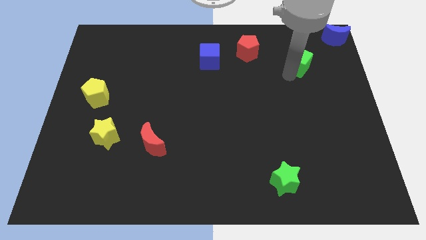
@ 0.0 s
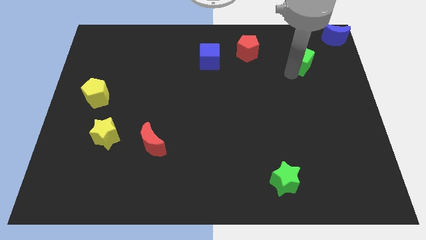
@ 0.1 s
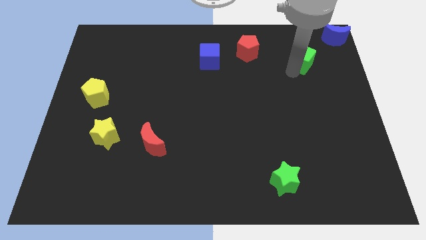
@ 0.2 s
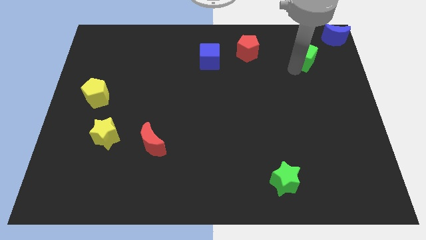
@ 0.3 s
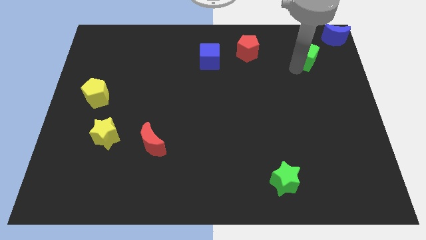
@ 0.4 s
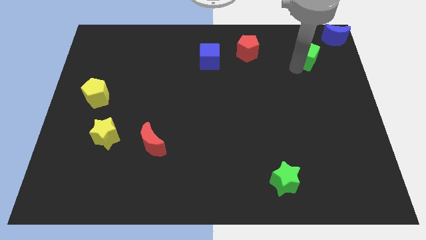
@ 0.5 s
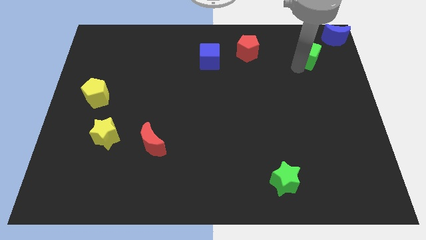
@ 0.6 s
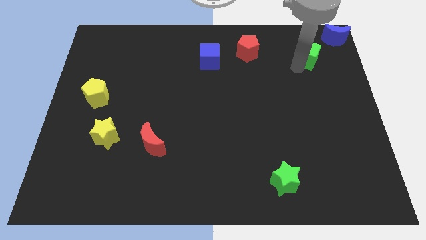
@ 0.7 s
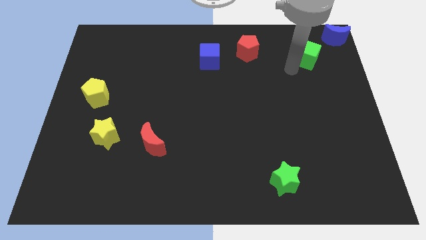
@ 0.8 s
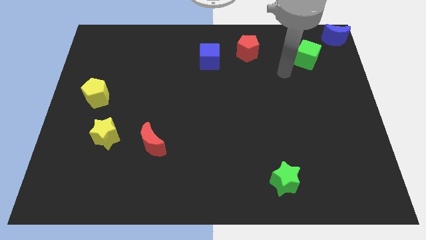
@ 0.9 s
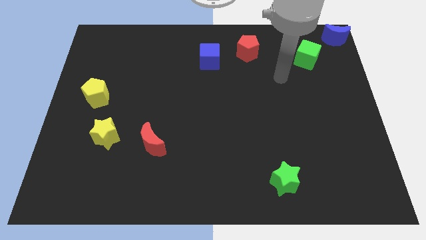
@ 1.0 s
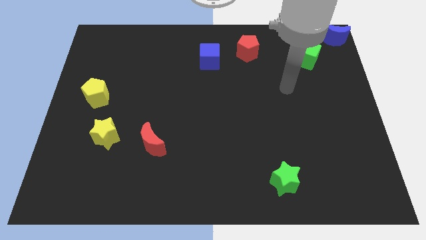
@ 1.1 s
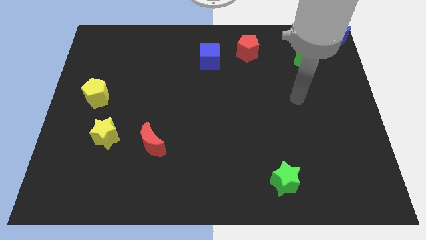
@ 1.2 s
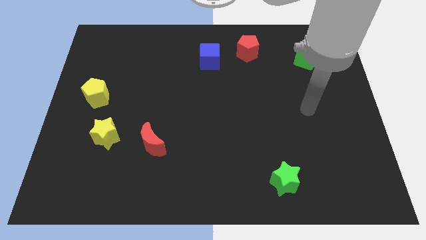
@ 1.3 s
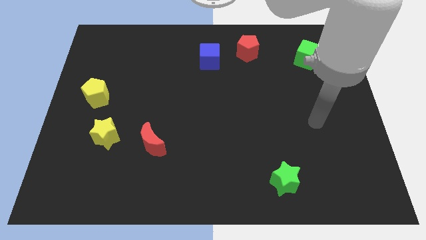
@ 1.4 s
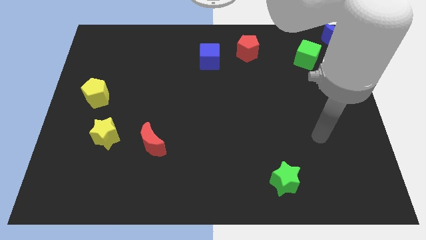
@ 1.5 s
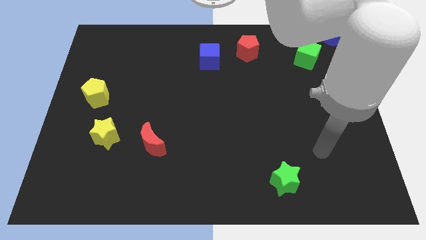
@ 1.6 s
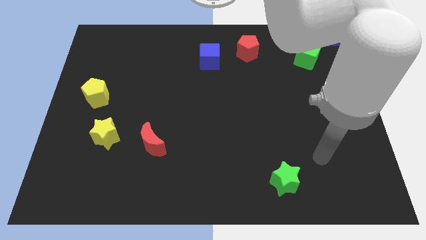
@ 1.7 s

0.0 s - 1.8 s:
push the green cube close to the blue moon

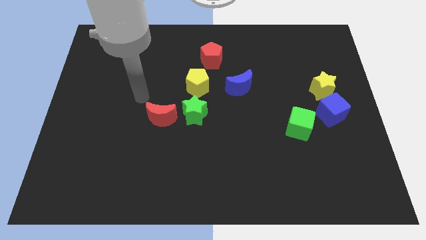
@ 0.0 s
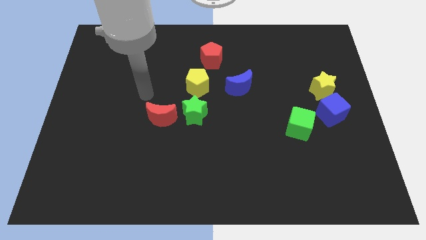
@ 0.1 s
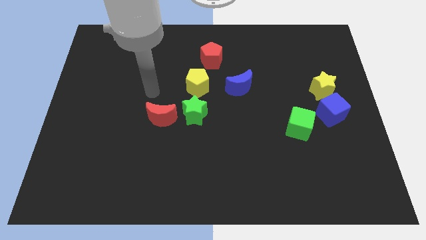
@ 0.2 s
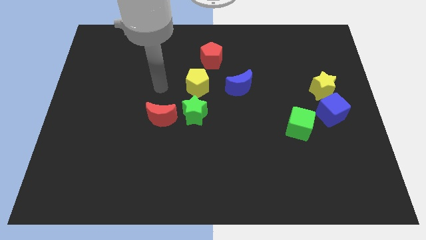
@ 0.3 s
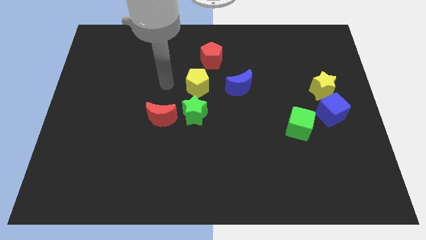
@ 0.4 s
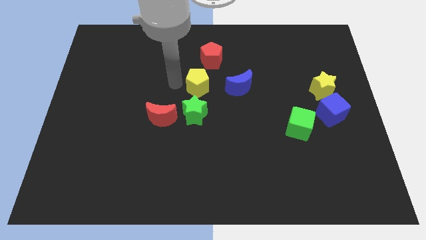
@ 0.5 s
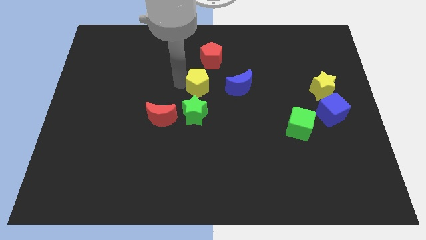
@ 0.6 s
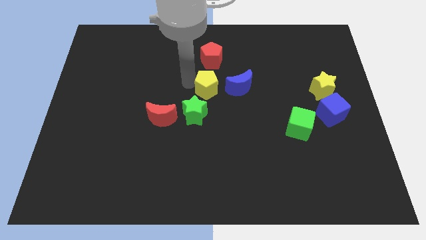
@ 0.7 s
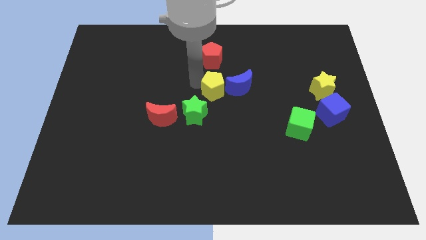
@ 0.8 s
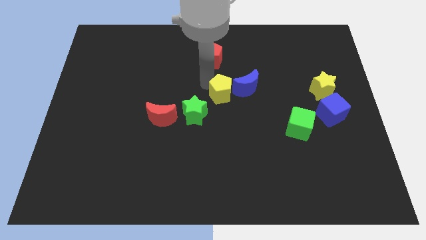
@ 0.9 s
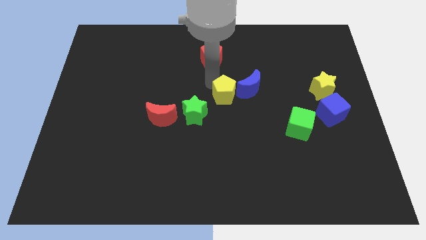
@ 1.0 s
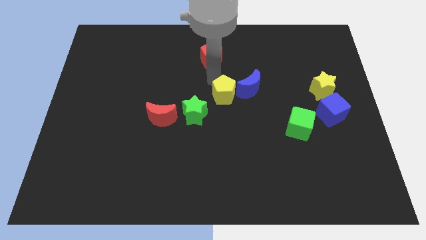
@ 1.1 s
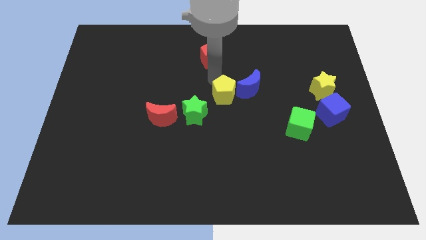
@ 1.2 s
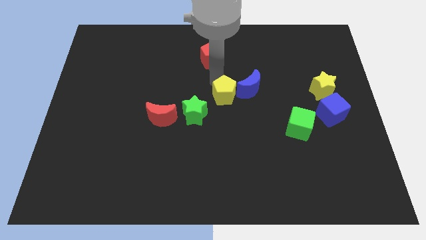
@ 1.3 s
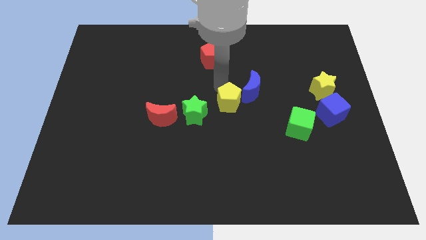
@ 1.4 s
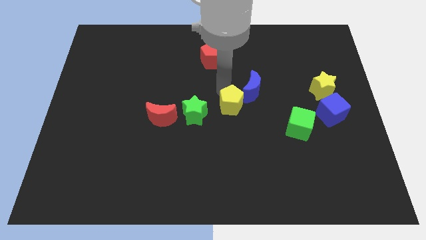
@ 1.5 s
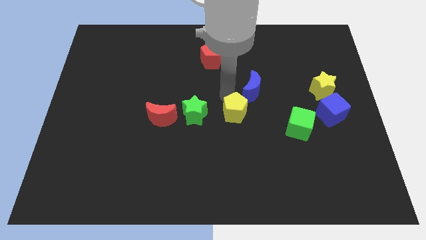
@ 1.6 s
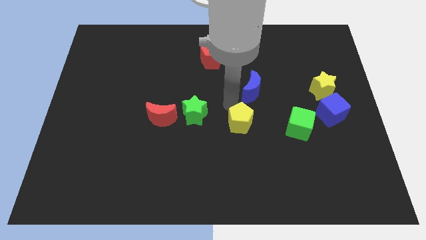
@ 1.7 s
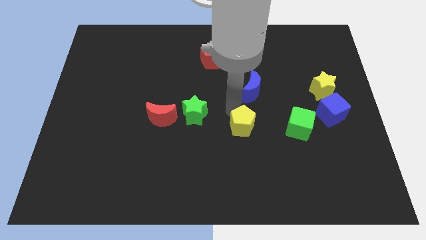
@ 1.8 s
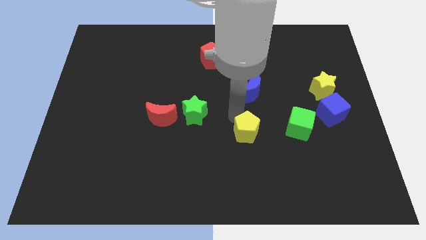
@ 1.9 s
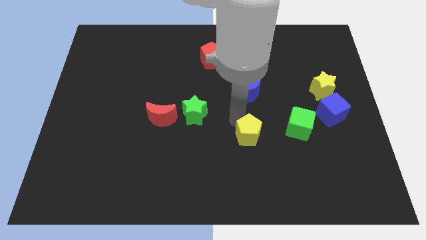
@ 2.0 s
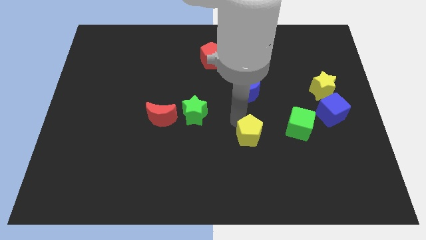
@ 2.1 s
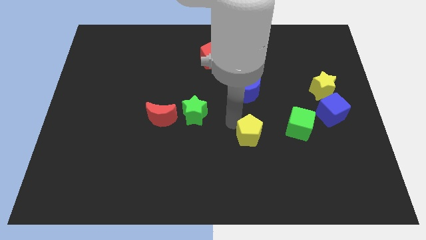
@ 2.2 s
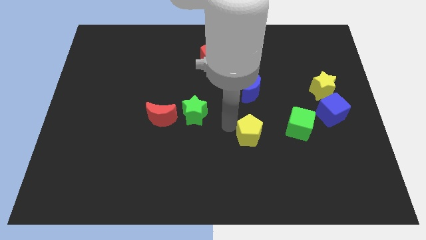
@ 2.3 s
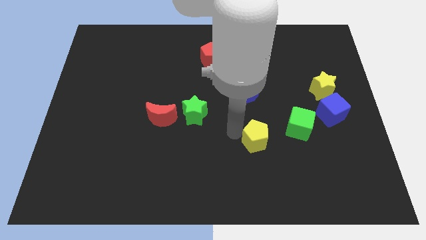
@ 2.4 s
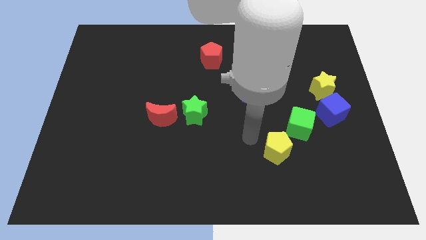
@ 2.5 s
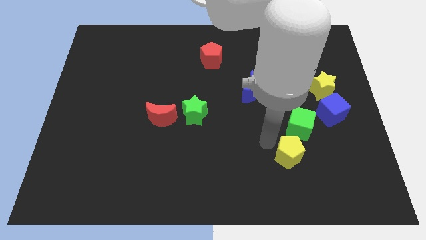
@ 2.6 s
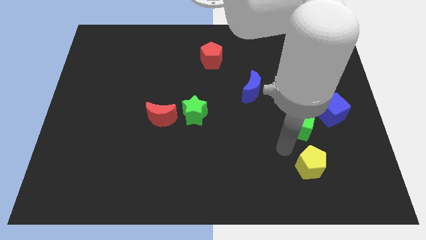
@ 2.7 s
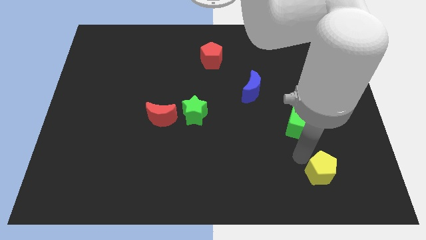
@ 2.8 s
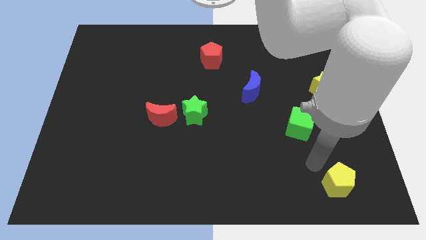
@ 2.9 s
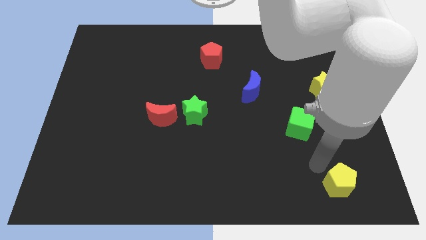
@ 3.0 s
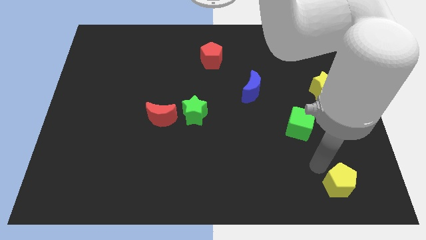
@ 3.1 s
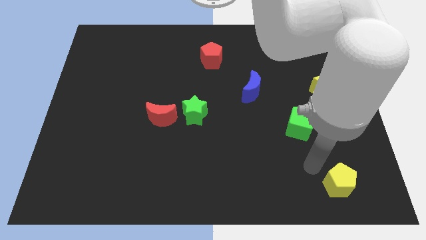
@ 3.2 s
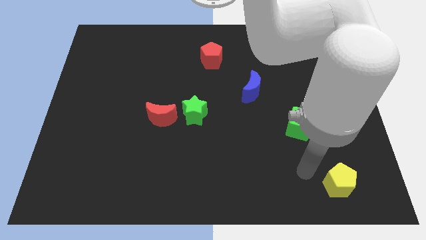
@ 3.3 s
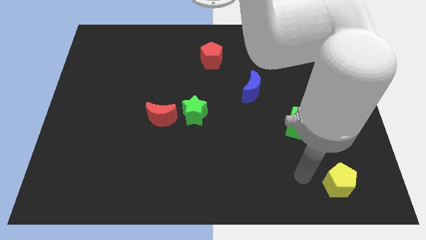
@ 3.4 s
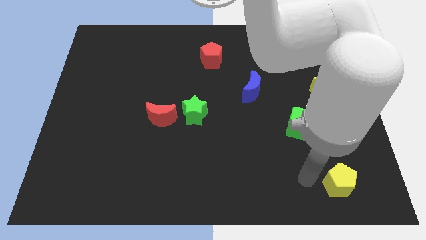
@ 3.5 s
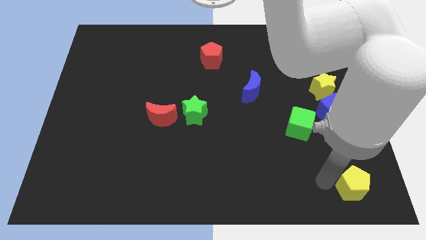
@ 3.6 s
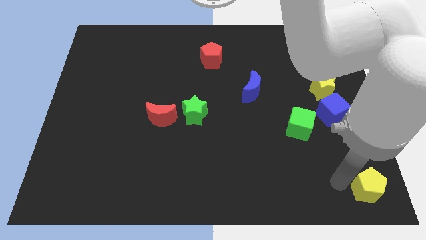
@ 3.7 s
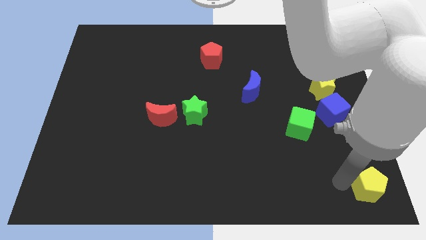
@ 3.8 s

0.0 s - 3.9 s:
drag the yellow pentagon from center to bottom right side of the board

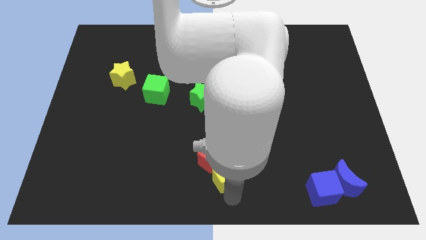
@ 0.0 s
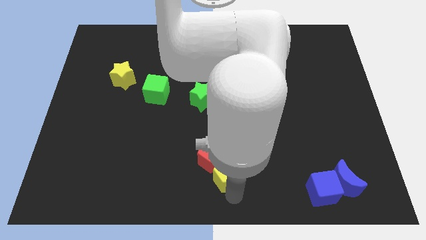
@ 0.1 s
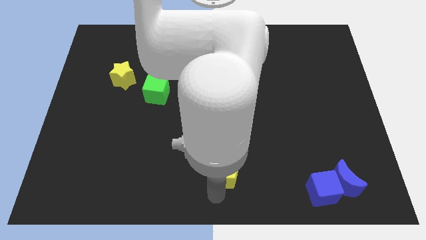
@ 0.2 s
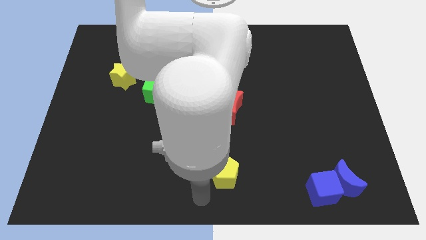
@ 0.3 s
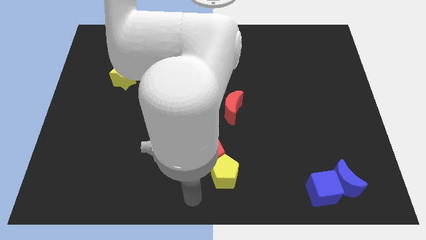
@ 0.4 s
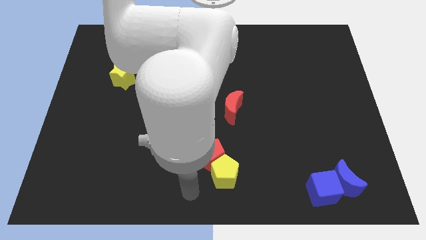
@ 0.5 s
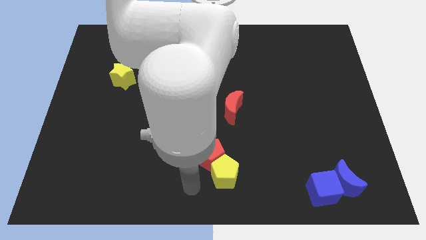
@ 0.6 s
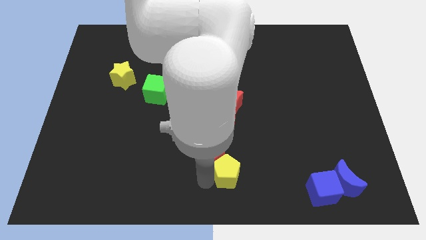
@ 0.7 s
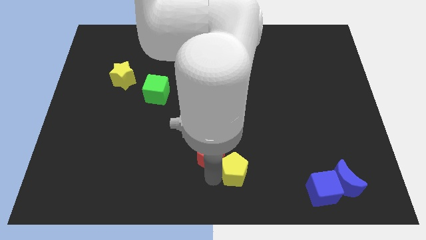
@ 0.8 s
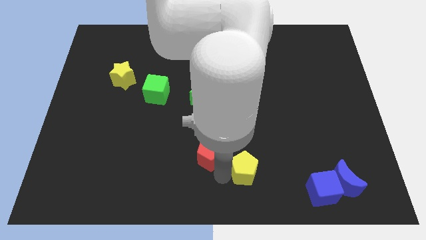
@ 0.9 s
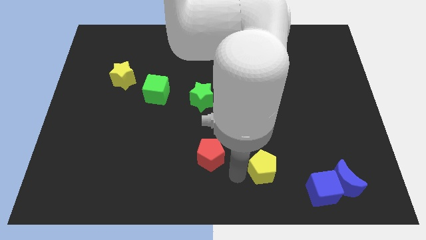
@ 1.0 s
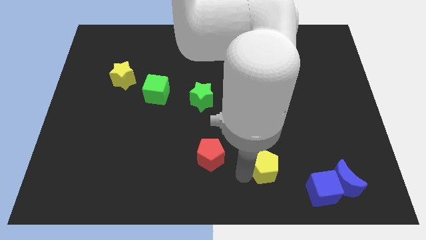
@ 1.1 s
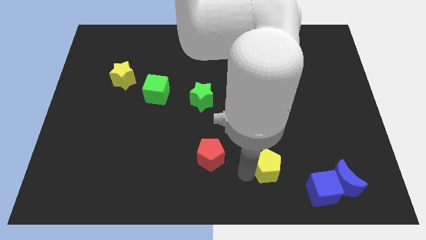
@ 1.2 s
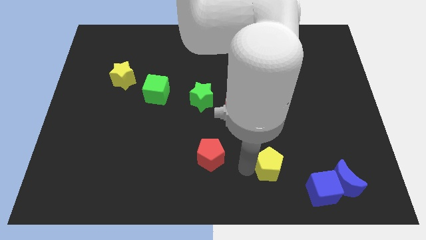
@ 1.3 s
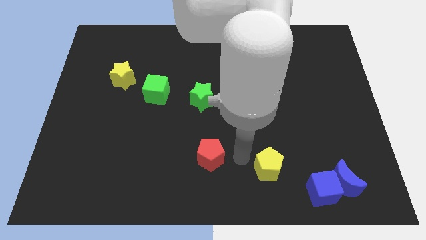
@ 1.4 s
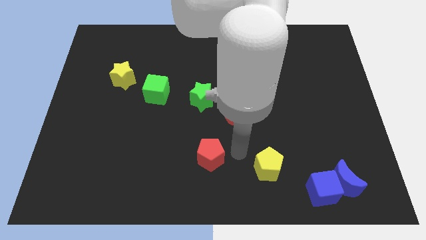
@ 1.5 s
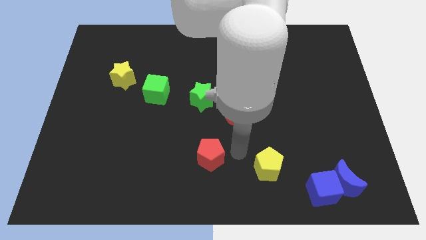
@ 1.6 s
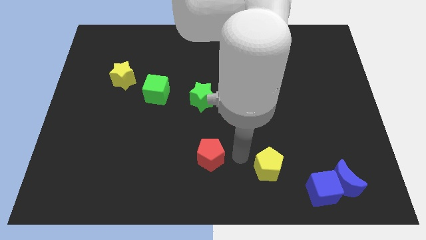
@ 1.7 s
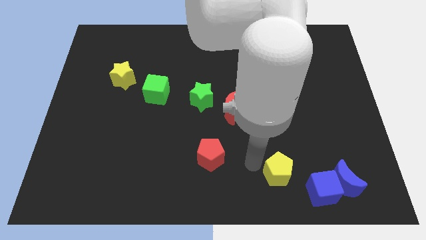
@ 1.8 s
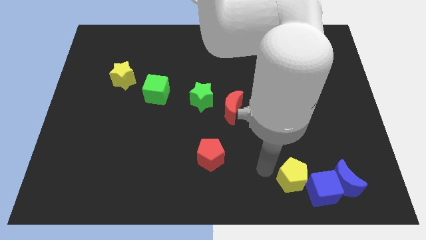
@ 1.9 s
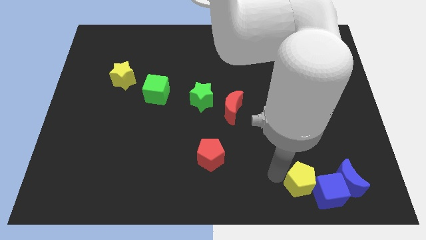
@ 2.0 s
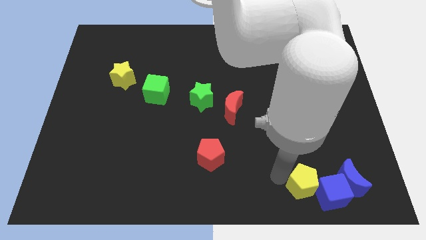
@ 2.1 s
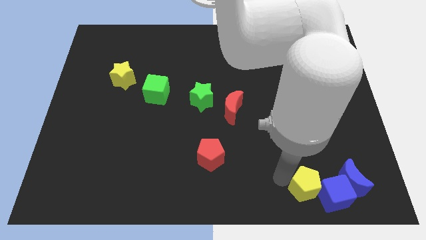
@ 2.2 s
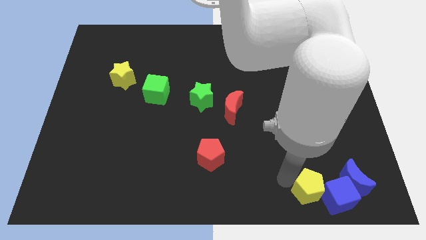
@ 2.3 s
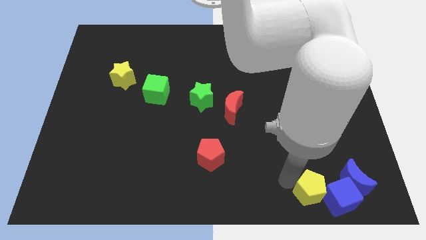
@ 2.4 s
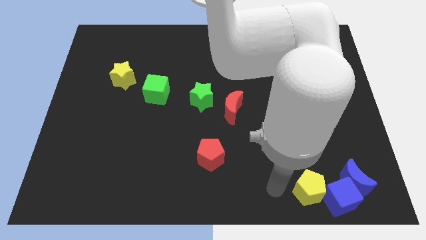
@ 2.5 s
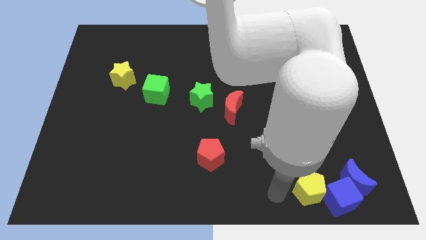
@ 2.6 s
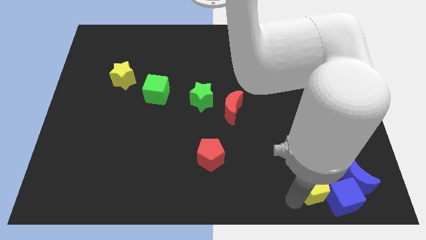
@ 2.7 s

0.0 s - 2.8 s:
push yellow pentagon in to blue cube

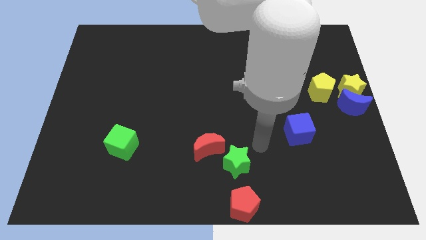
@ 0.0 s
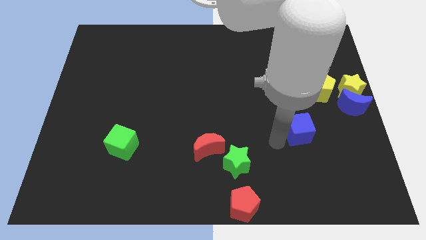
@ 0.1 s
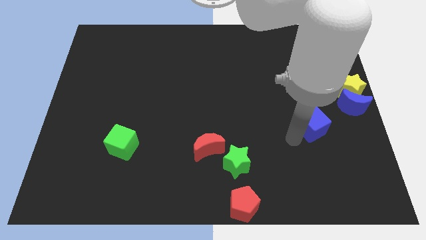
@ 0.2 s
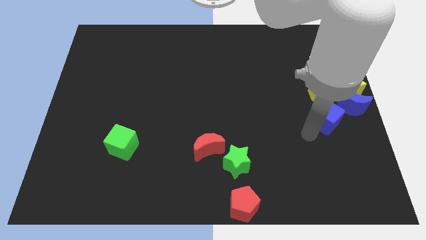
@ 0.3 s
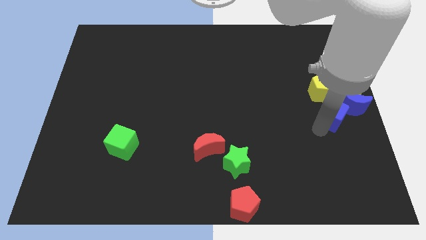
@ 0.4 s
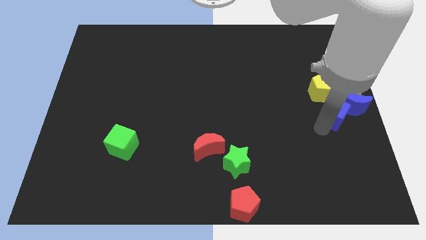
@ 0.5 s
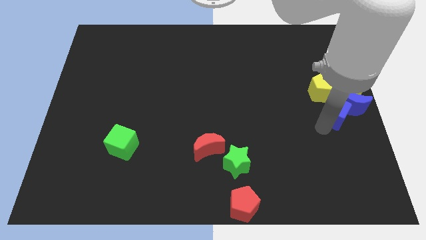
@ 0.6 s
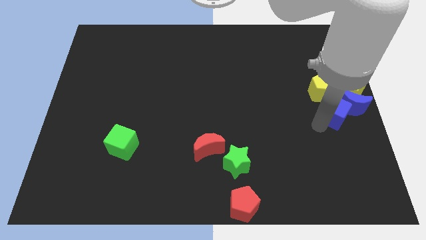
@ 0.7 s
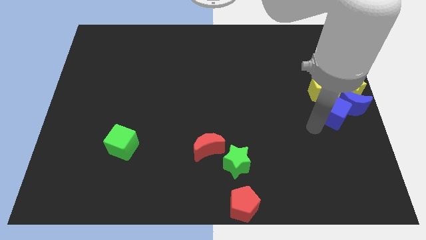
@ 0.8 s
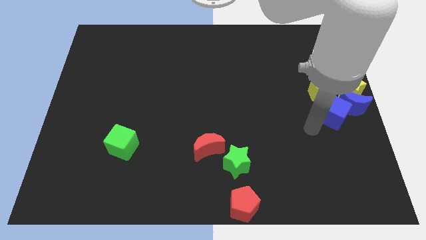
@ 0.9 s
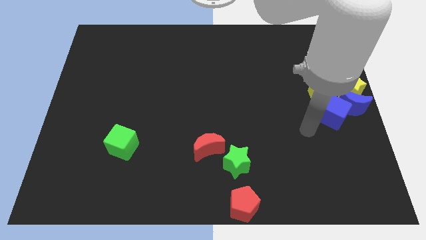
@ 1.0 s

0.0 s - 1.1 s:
push the blue cube into the blue crescent
